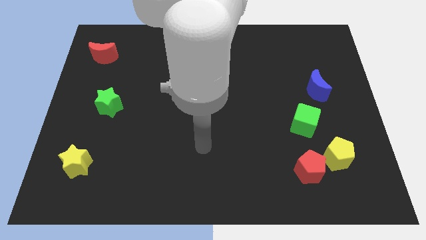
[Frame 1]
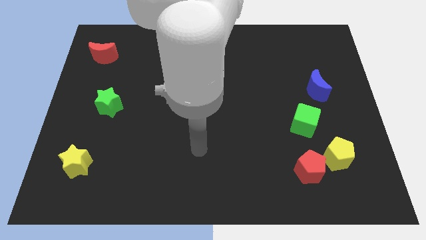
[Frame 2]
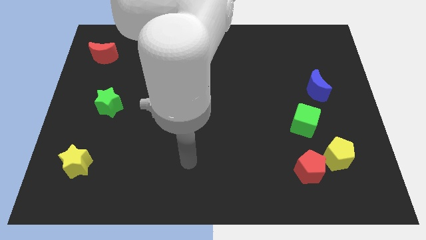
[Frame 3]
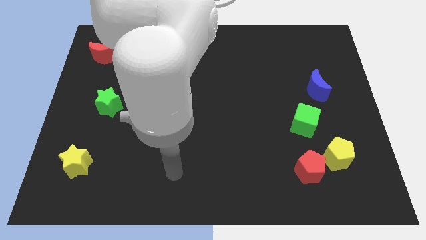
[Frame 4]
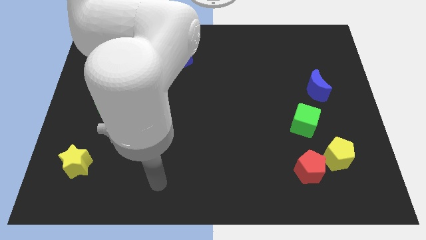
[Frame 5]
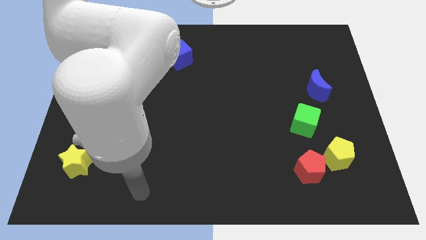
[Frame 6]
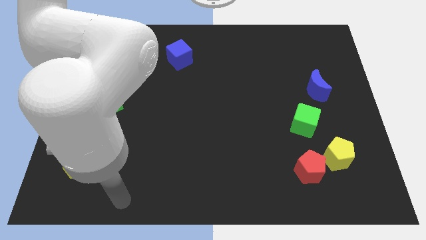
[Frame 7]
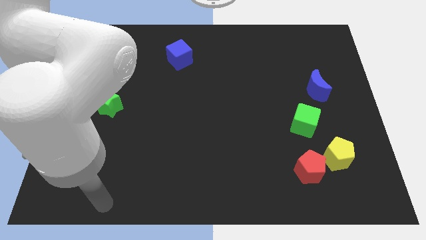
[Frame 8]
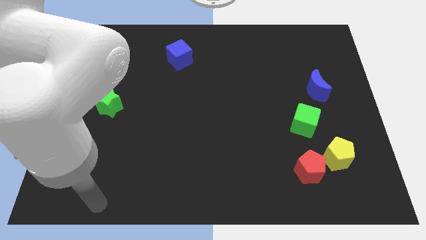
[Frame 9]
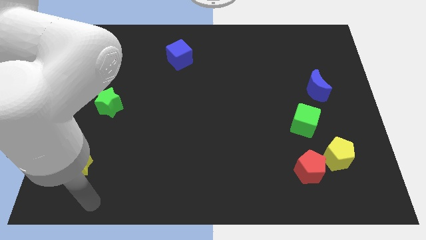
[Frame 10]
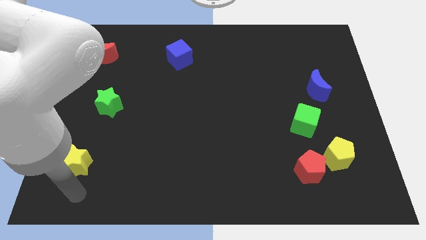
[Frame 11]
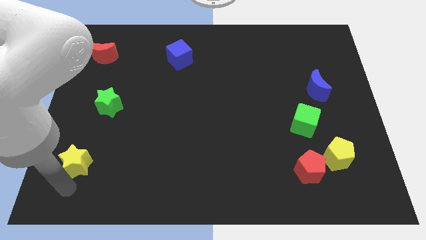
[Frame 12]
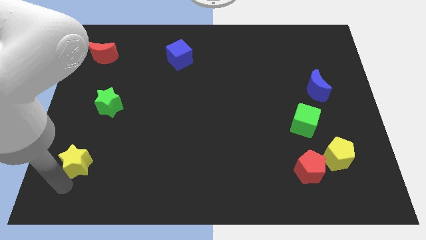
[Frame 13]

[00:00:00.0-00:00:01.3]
move your hand to the bottom side of the yellow star

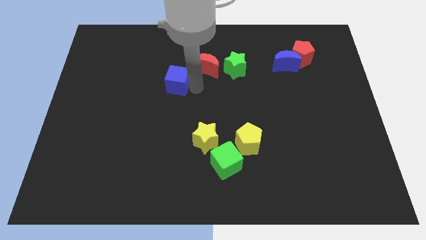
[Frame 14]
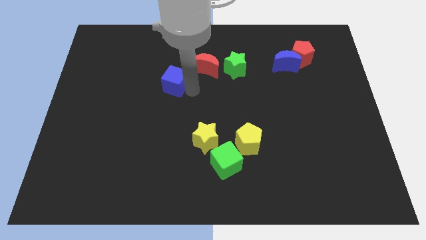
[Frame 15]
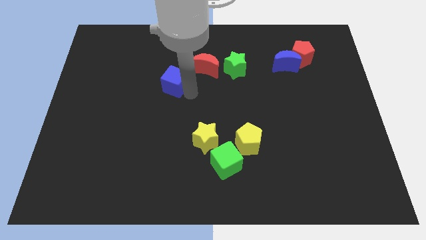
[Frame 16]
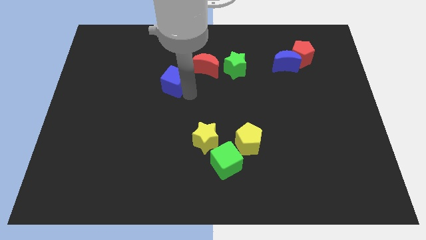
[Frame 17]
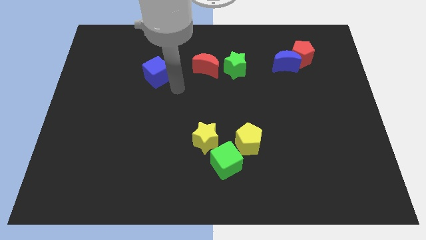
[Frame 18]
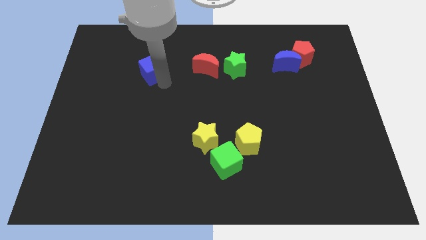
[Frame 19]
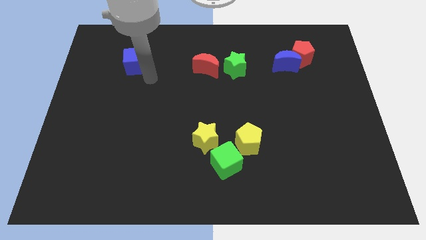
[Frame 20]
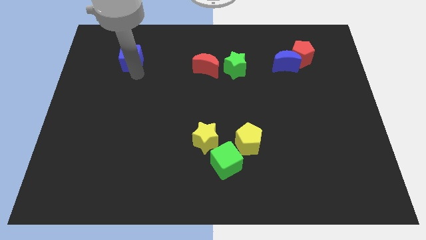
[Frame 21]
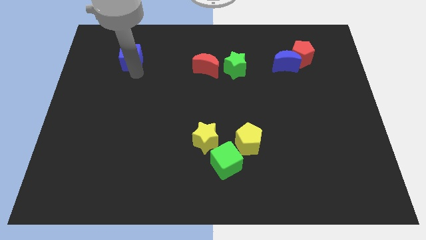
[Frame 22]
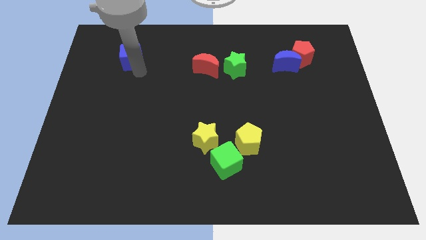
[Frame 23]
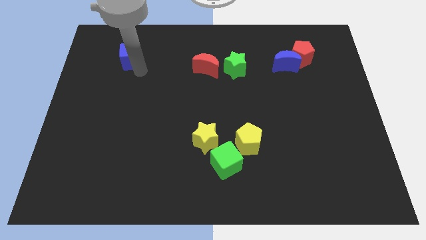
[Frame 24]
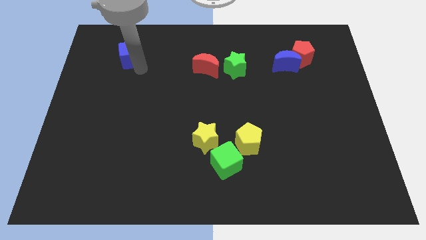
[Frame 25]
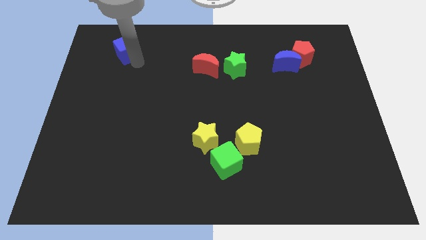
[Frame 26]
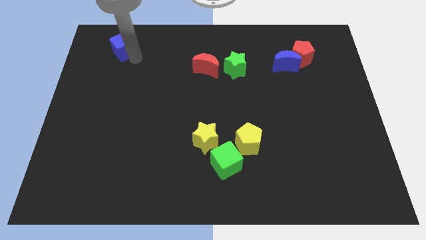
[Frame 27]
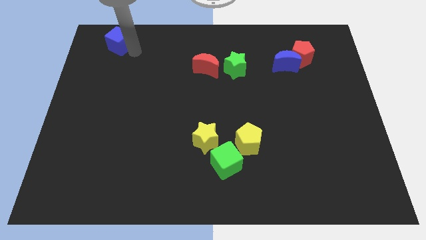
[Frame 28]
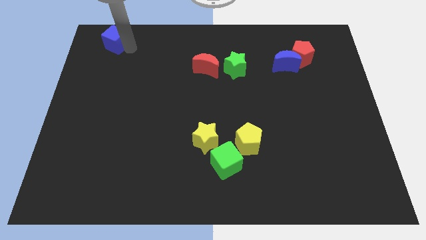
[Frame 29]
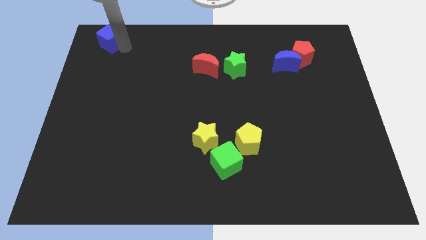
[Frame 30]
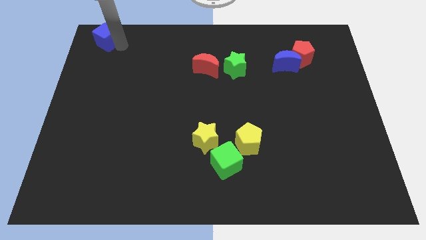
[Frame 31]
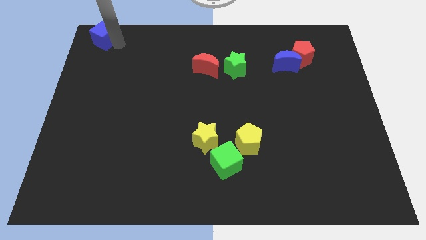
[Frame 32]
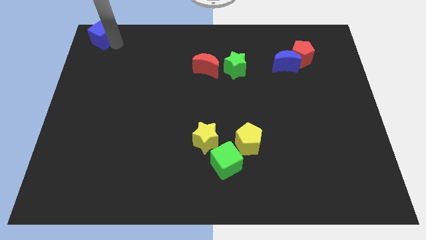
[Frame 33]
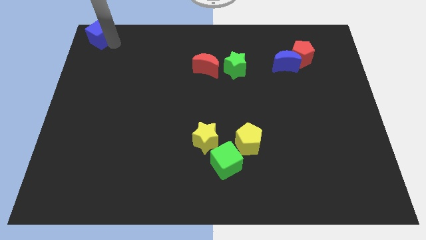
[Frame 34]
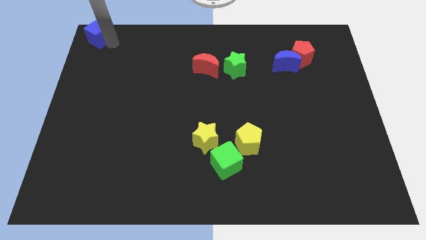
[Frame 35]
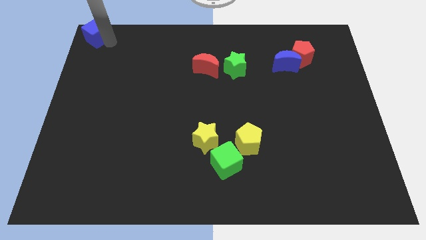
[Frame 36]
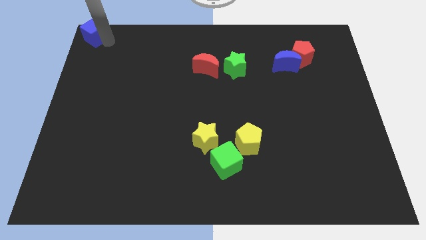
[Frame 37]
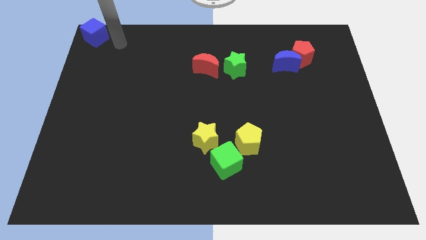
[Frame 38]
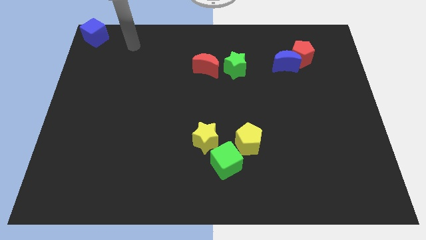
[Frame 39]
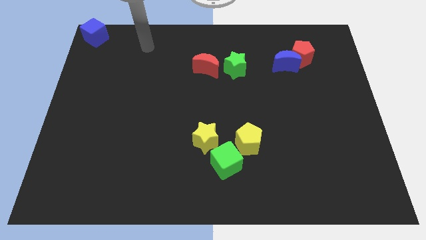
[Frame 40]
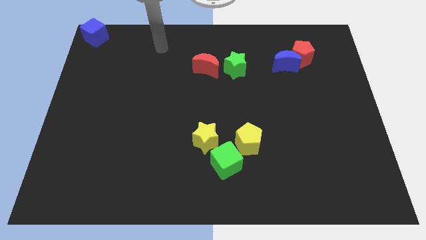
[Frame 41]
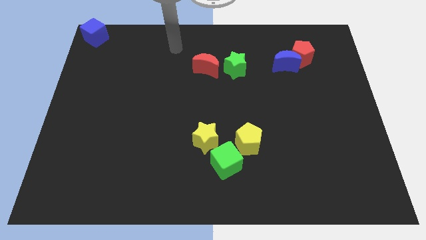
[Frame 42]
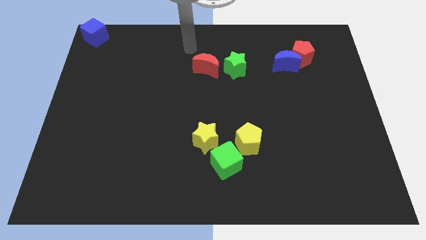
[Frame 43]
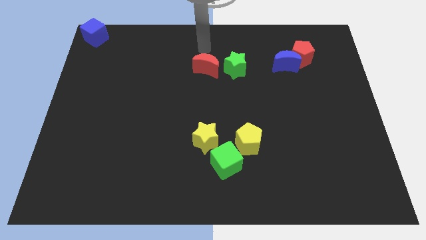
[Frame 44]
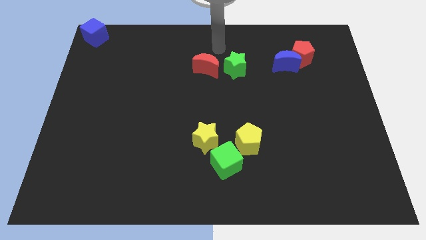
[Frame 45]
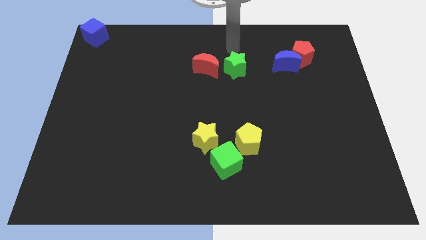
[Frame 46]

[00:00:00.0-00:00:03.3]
place the blue cube at the top left corner of the board

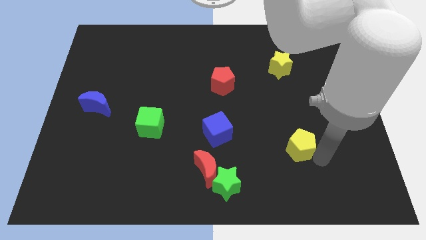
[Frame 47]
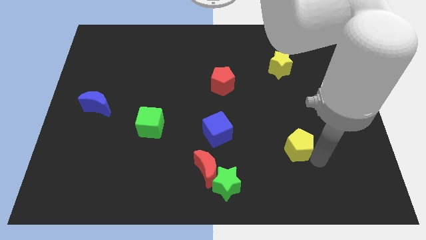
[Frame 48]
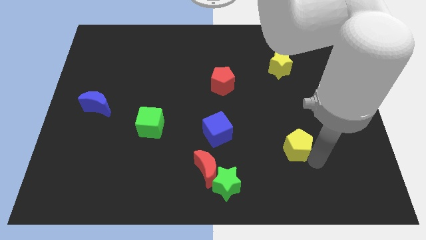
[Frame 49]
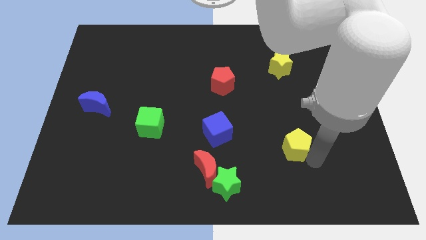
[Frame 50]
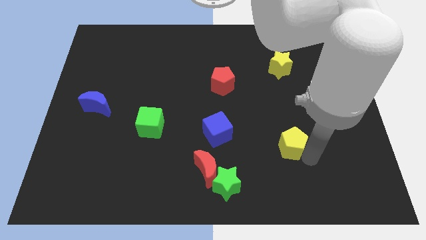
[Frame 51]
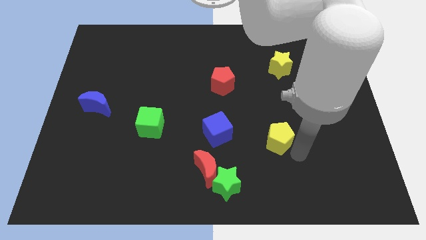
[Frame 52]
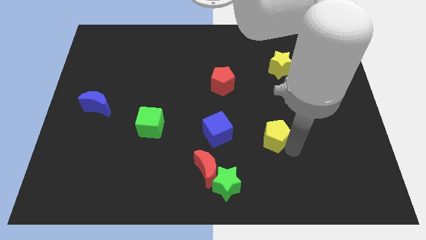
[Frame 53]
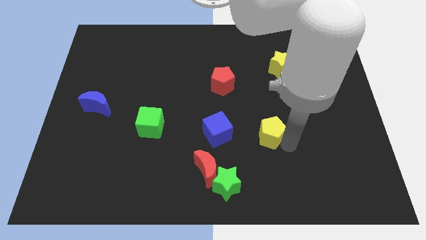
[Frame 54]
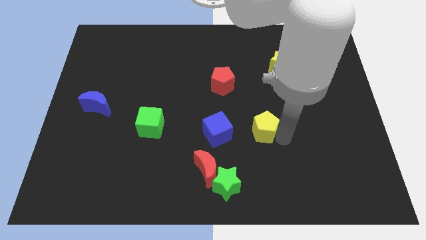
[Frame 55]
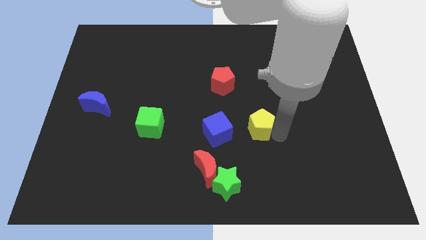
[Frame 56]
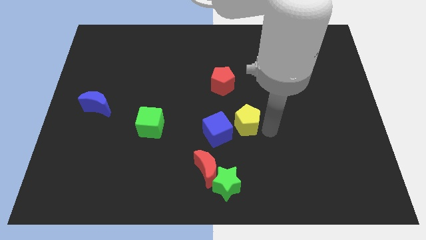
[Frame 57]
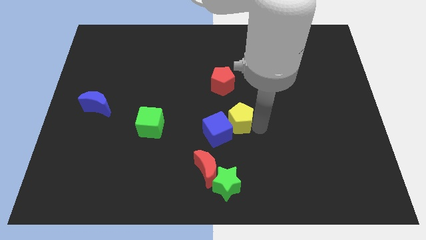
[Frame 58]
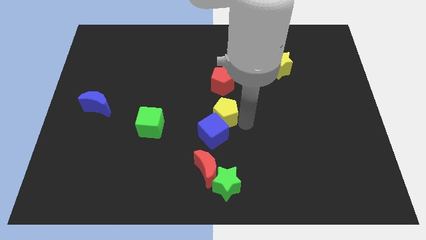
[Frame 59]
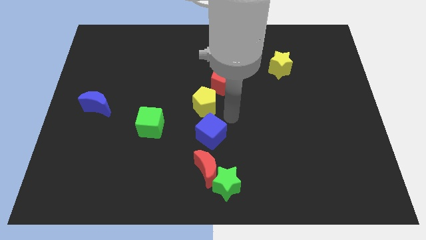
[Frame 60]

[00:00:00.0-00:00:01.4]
move the yellow pentagon to the top of the blue cube

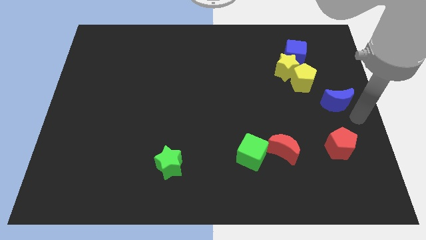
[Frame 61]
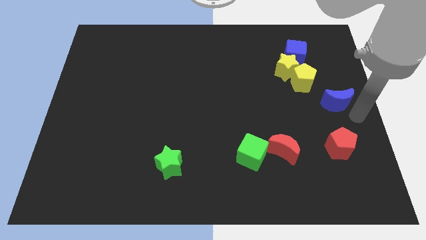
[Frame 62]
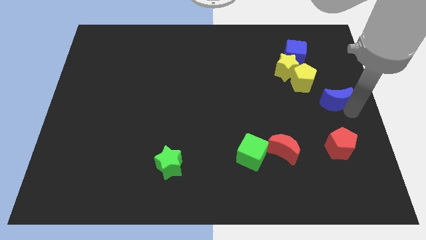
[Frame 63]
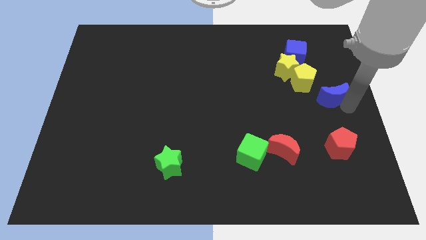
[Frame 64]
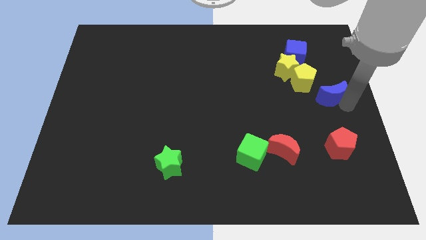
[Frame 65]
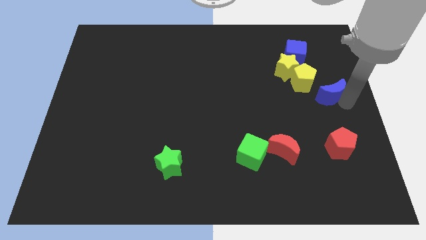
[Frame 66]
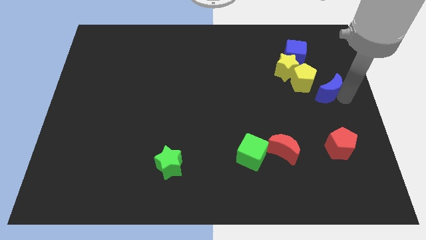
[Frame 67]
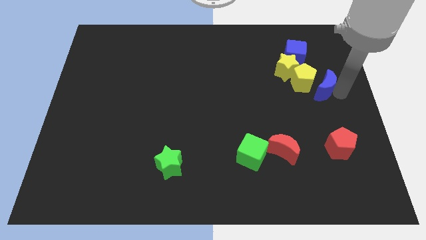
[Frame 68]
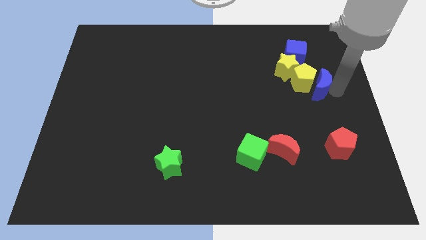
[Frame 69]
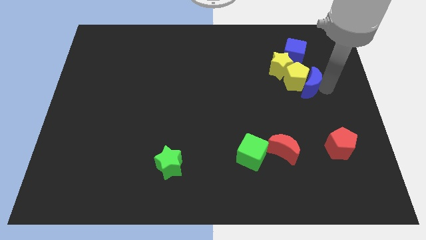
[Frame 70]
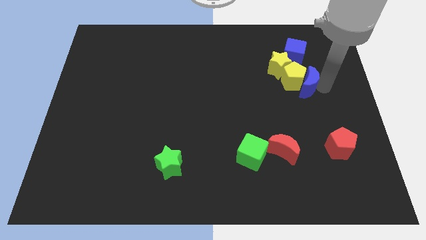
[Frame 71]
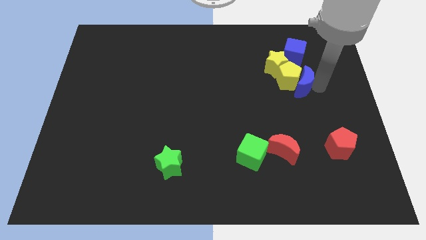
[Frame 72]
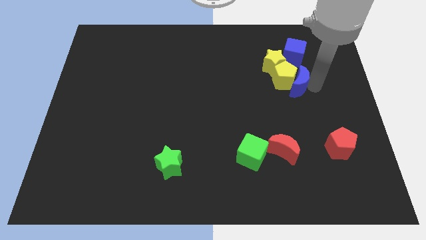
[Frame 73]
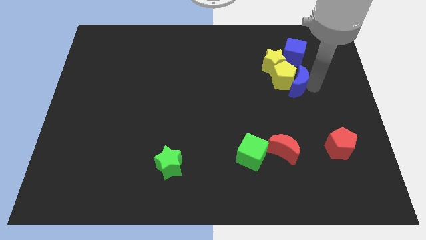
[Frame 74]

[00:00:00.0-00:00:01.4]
push the blue crescent to the right side of the yellow pentagon

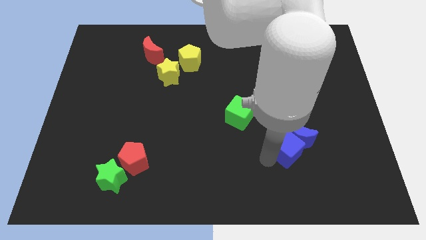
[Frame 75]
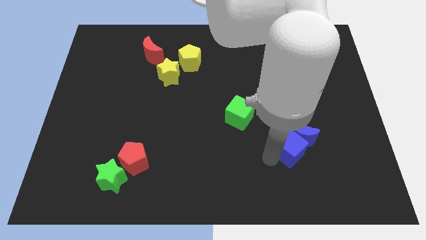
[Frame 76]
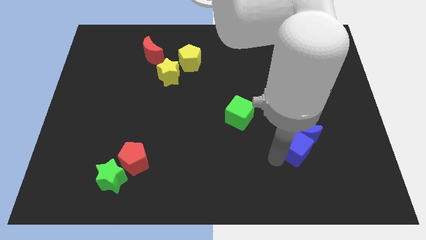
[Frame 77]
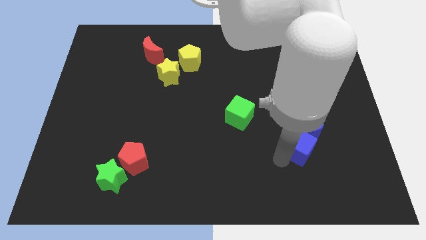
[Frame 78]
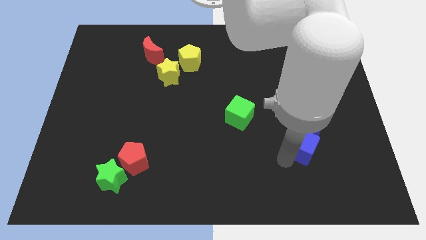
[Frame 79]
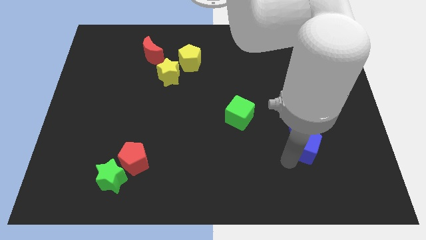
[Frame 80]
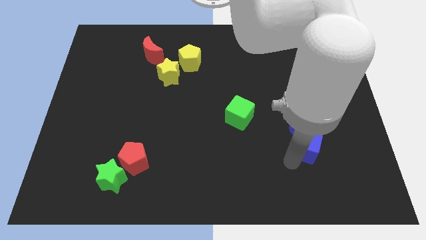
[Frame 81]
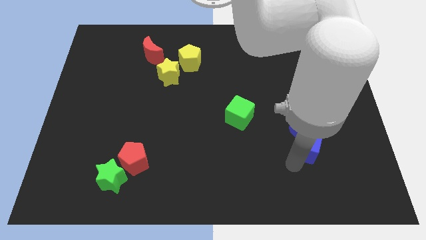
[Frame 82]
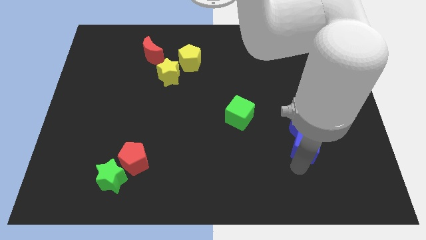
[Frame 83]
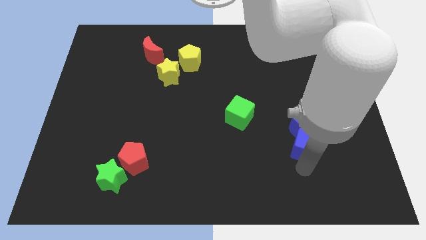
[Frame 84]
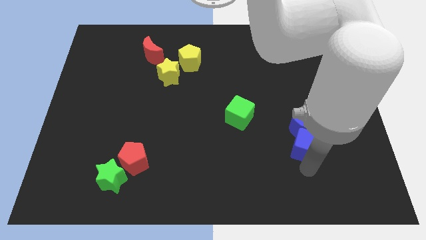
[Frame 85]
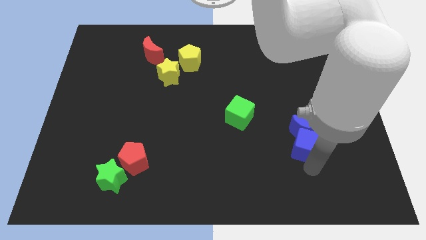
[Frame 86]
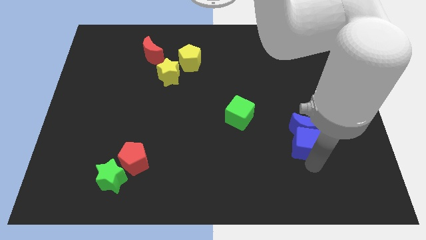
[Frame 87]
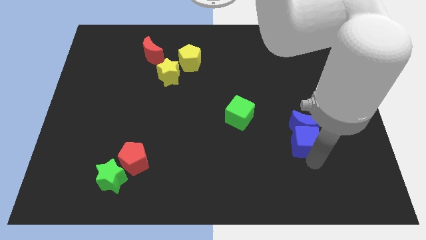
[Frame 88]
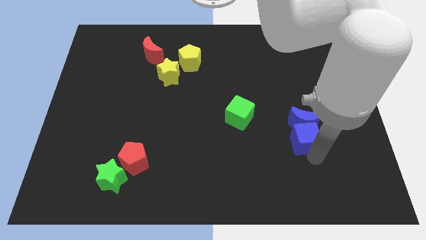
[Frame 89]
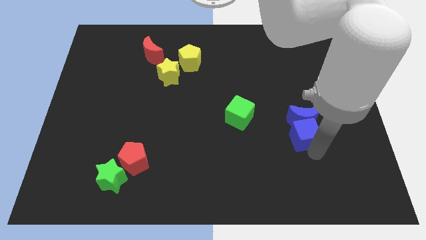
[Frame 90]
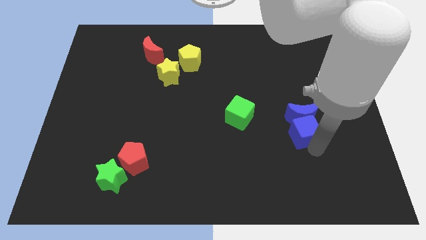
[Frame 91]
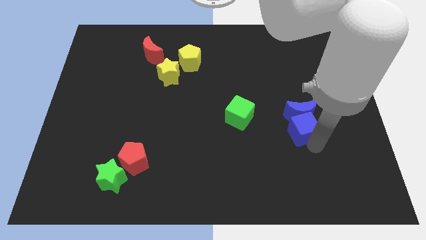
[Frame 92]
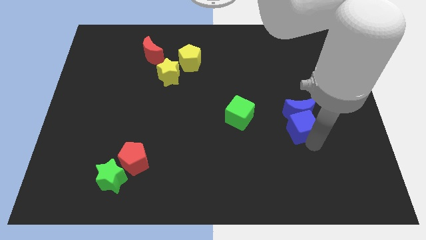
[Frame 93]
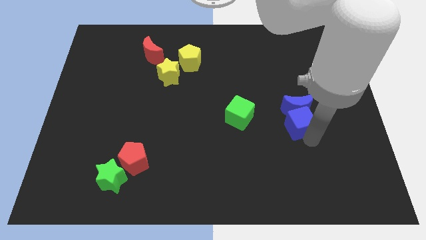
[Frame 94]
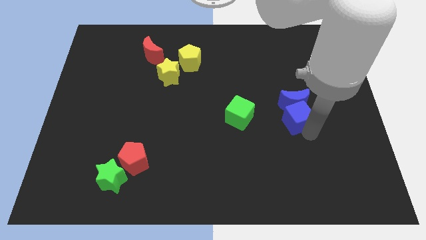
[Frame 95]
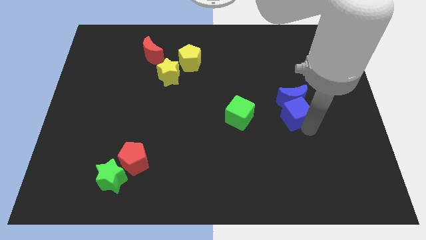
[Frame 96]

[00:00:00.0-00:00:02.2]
move the blue cube and blue crescent towards the top right side of the board
